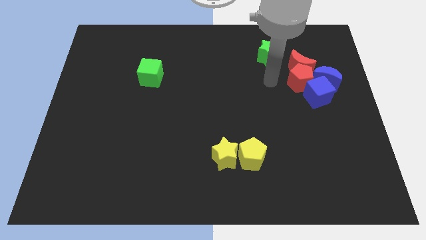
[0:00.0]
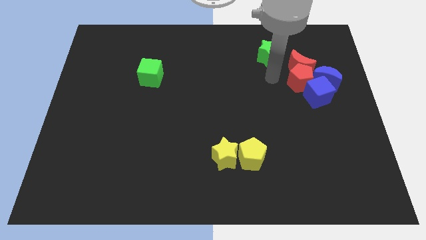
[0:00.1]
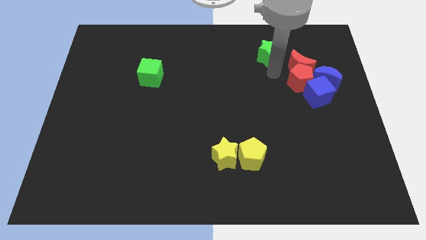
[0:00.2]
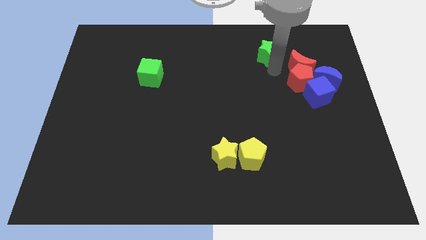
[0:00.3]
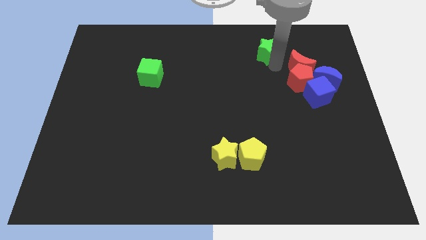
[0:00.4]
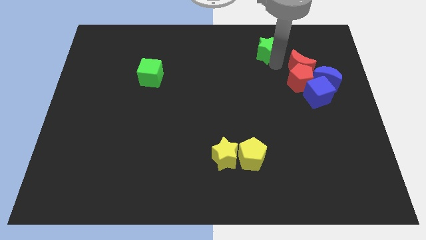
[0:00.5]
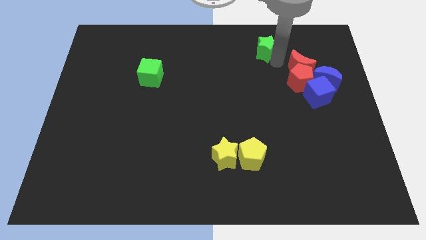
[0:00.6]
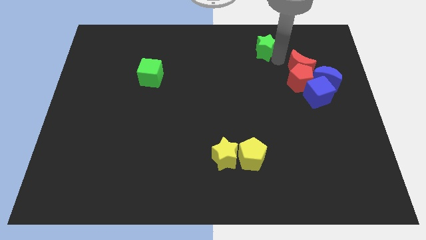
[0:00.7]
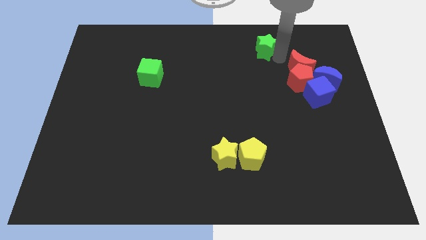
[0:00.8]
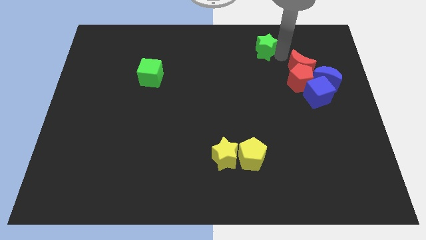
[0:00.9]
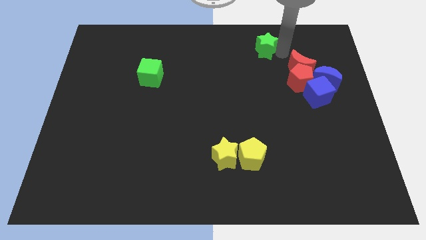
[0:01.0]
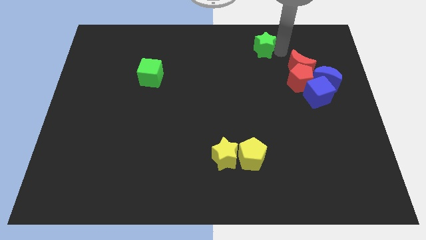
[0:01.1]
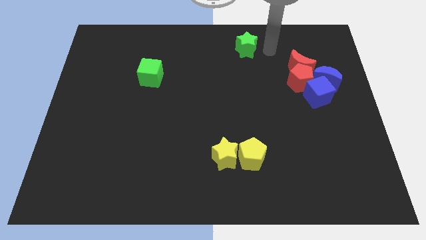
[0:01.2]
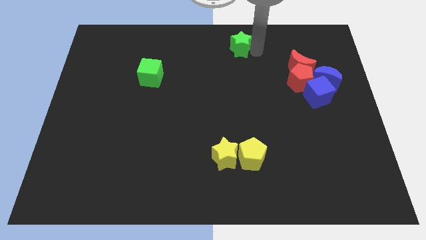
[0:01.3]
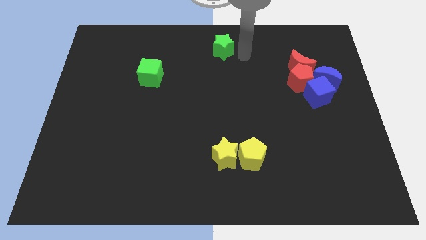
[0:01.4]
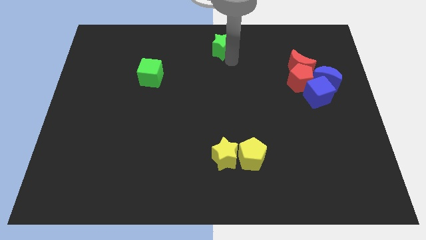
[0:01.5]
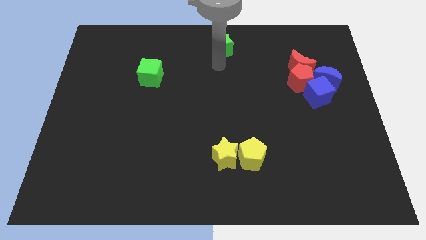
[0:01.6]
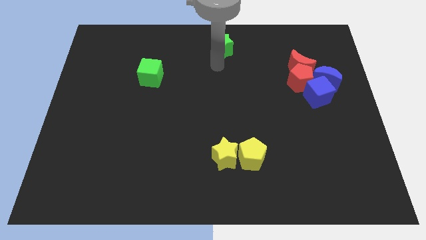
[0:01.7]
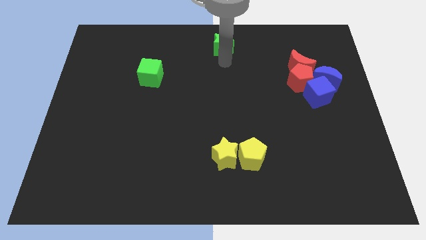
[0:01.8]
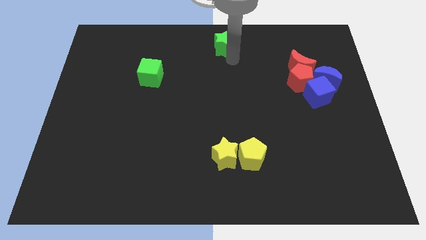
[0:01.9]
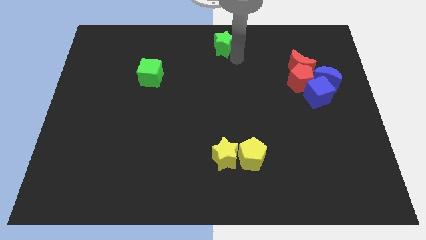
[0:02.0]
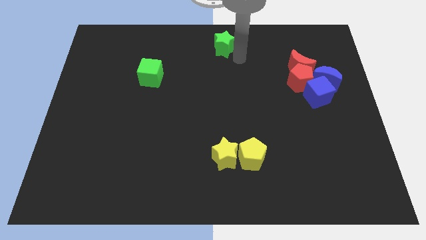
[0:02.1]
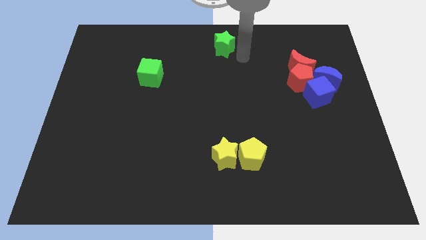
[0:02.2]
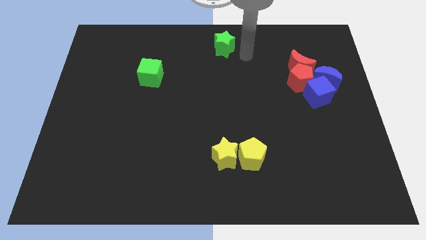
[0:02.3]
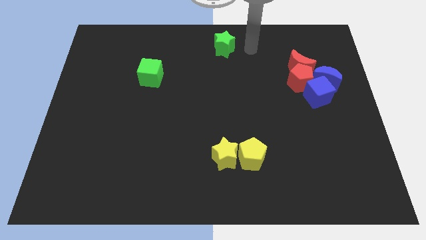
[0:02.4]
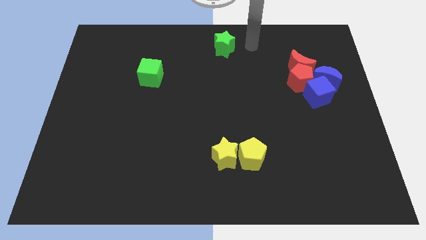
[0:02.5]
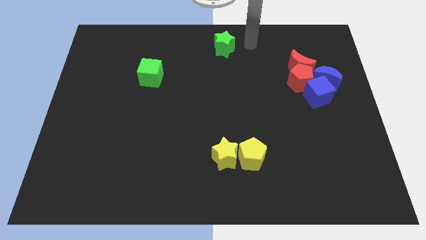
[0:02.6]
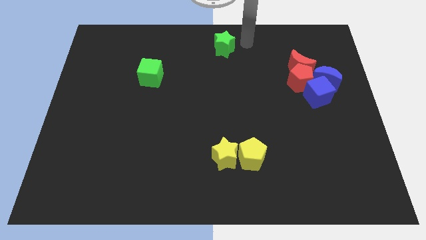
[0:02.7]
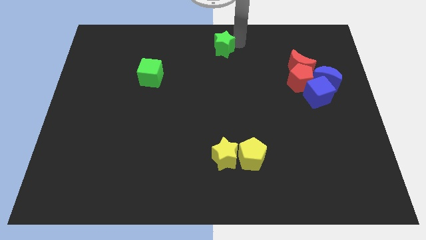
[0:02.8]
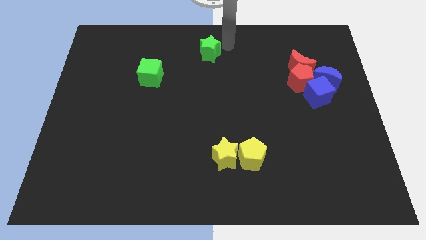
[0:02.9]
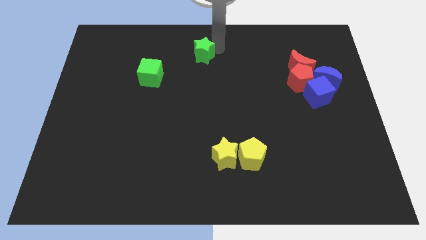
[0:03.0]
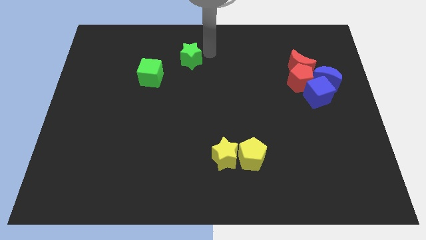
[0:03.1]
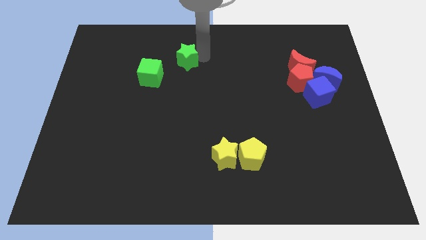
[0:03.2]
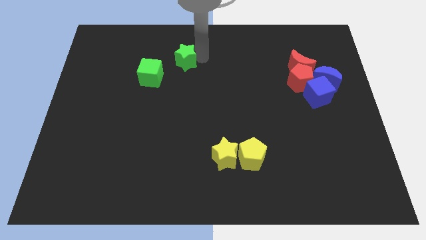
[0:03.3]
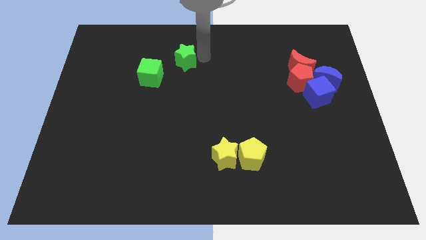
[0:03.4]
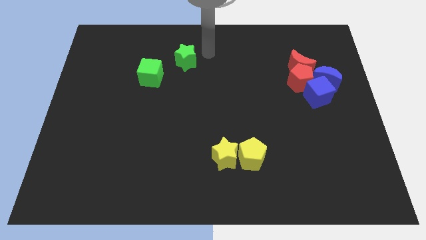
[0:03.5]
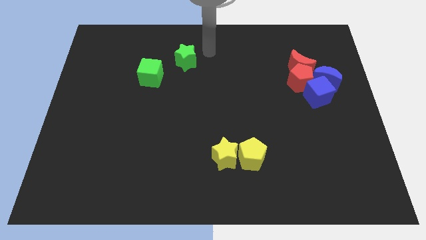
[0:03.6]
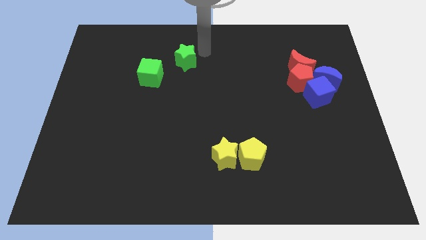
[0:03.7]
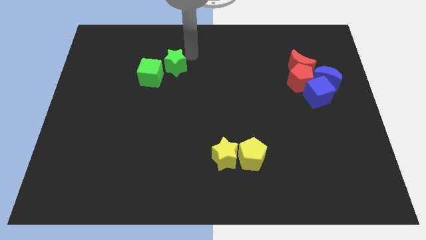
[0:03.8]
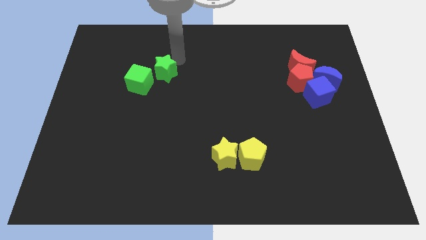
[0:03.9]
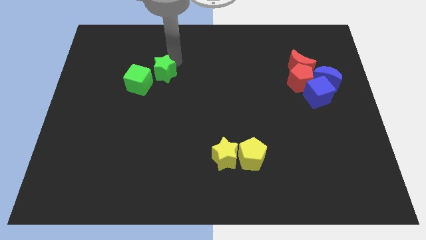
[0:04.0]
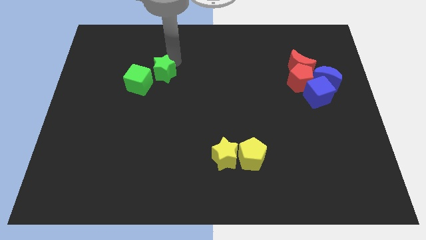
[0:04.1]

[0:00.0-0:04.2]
move green star into green cube

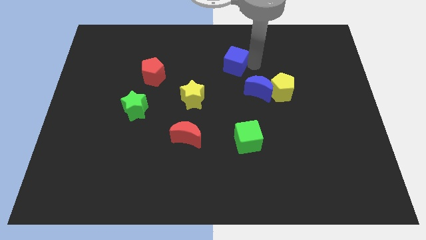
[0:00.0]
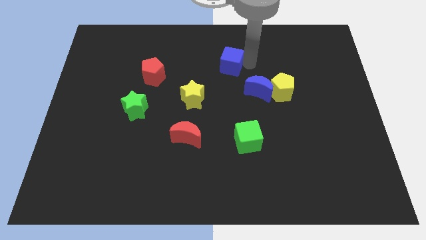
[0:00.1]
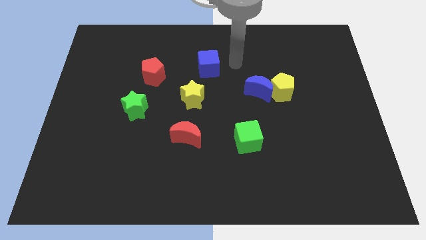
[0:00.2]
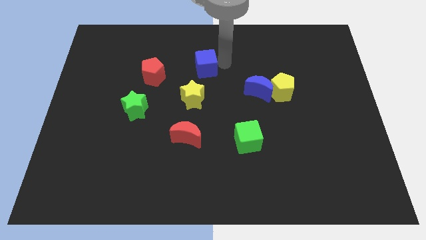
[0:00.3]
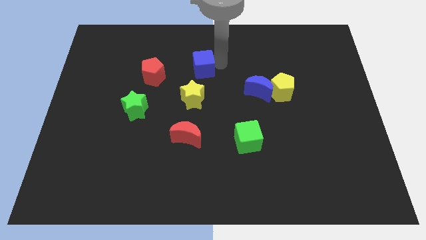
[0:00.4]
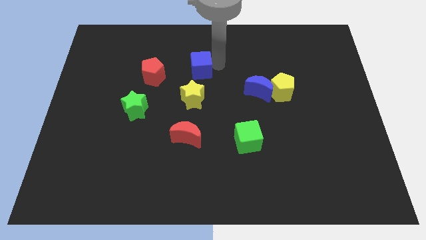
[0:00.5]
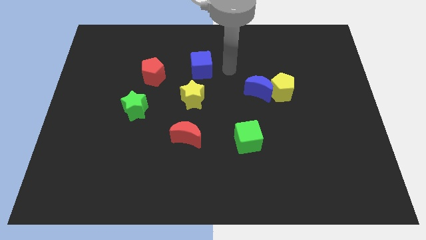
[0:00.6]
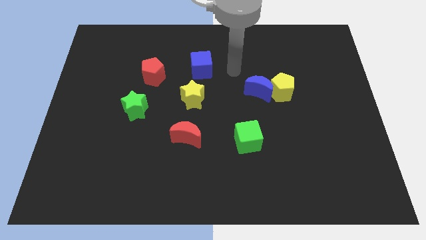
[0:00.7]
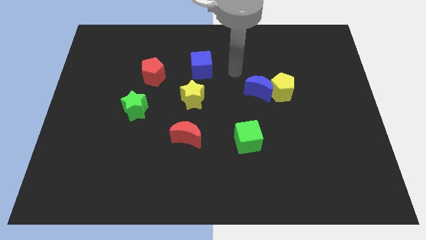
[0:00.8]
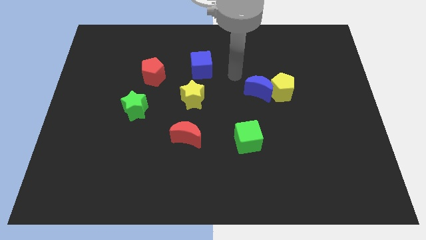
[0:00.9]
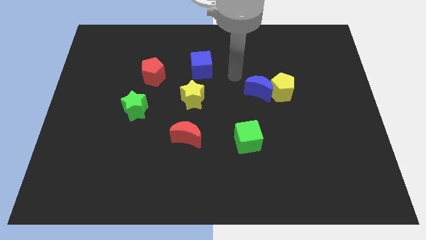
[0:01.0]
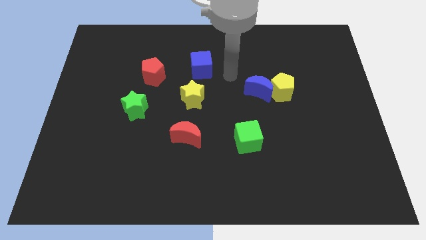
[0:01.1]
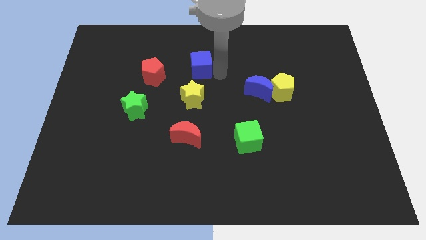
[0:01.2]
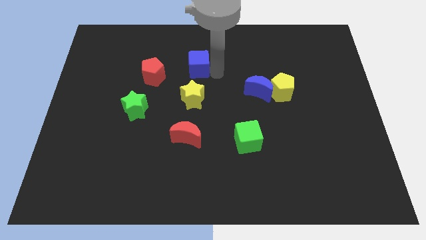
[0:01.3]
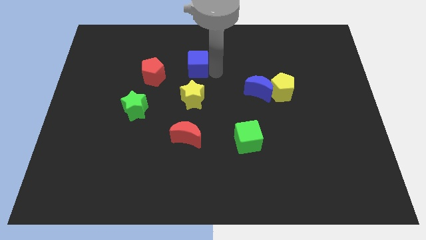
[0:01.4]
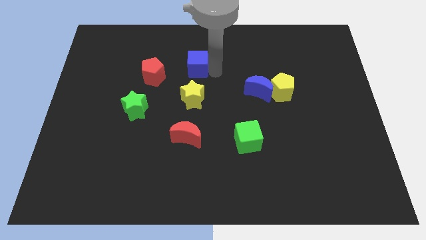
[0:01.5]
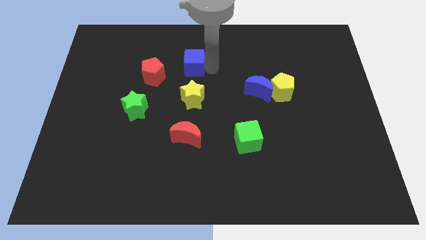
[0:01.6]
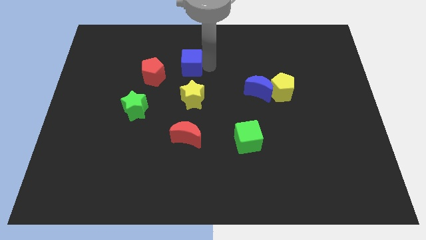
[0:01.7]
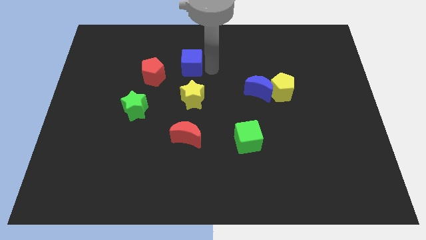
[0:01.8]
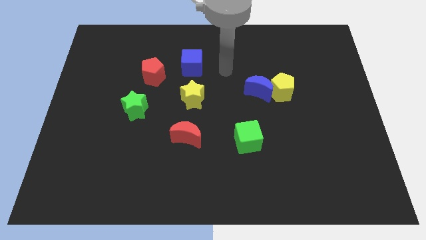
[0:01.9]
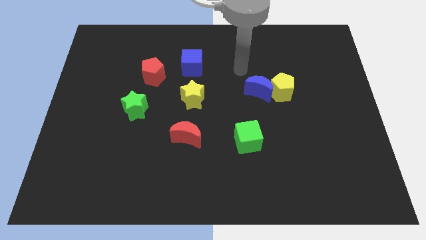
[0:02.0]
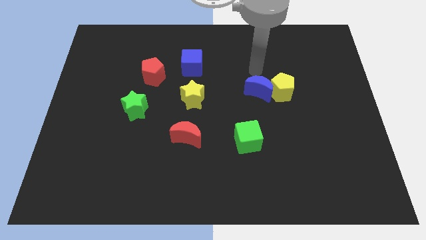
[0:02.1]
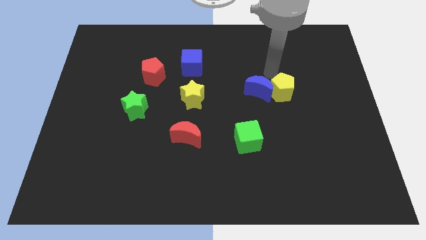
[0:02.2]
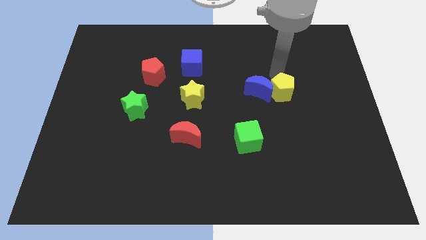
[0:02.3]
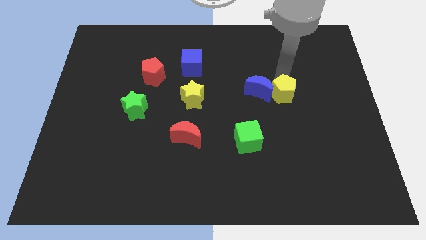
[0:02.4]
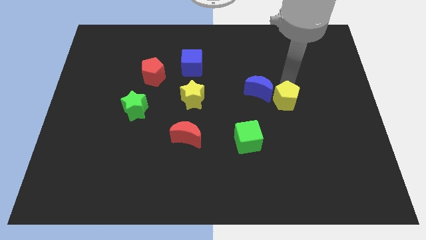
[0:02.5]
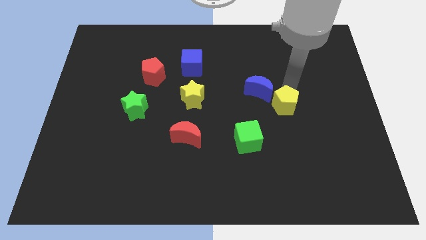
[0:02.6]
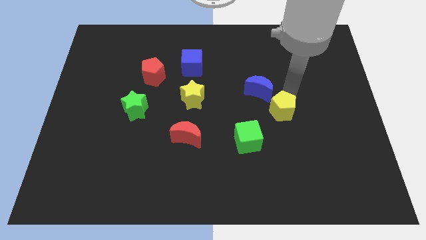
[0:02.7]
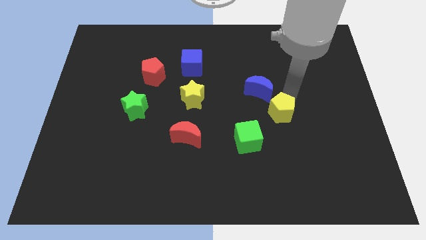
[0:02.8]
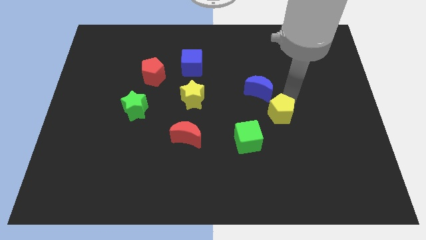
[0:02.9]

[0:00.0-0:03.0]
push yellow pentagon slightly to the bottom of the board

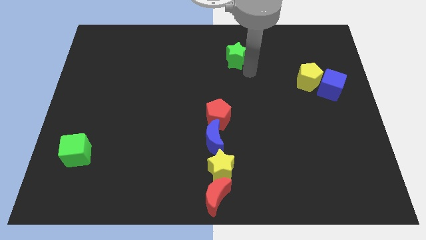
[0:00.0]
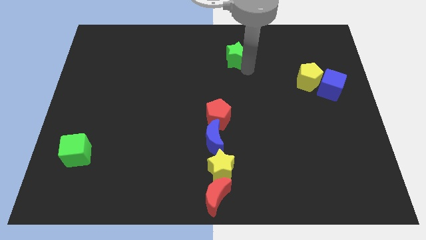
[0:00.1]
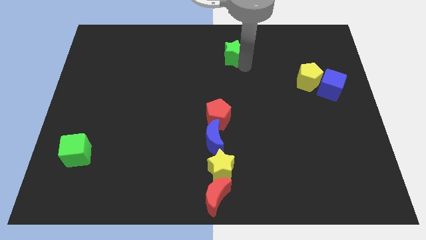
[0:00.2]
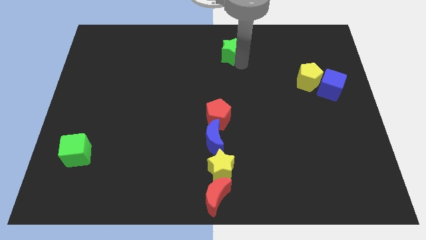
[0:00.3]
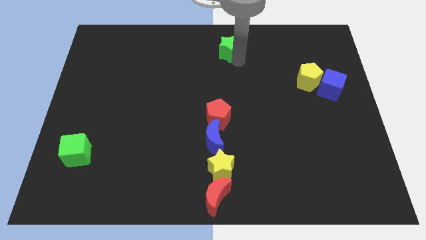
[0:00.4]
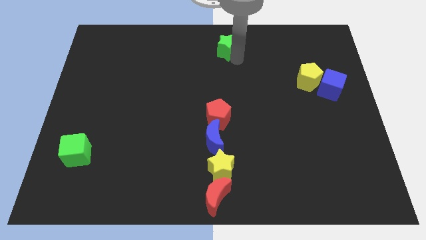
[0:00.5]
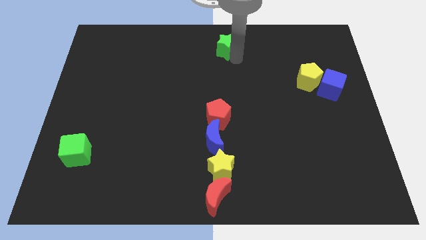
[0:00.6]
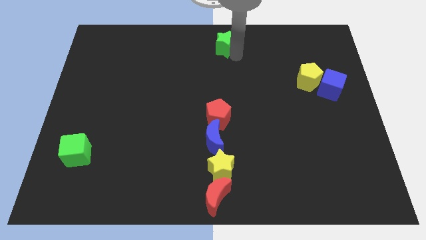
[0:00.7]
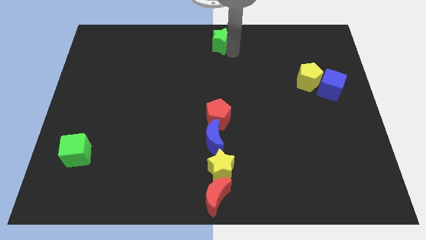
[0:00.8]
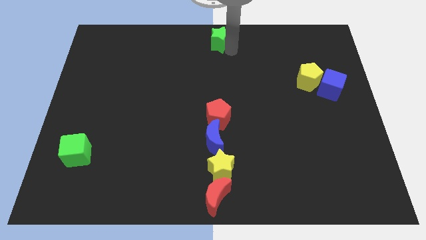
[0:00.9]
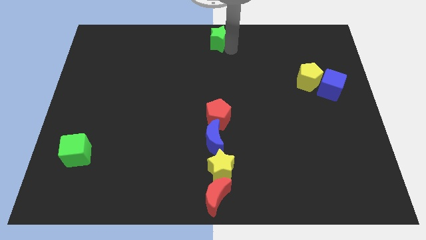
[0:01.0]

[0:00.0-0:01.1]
push the green star to the top center of the board

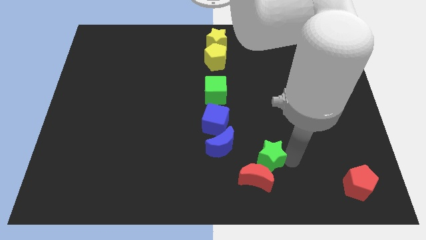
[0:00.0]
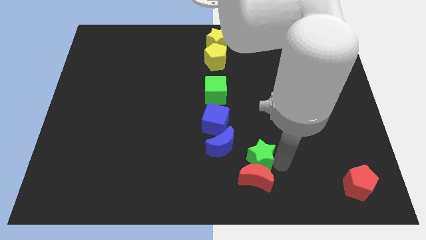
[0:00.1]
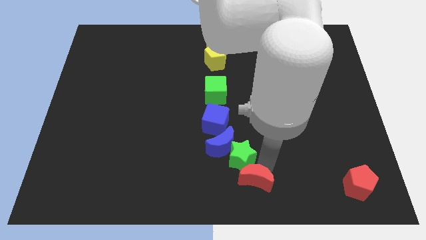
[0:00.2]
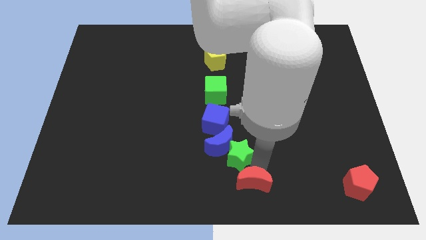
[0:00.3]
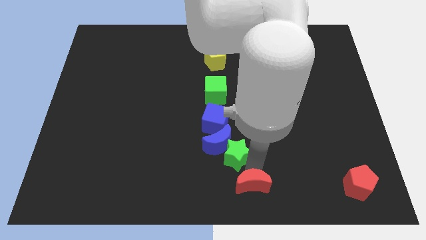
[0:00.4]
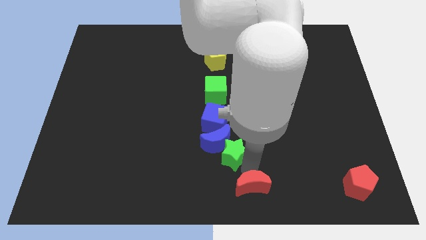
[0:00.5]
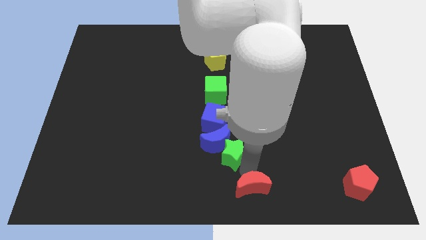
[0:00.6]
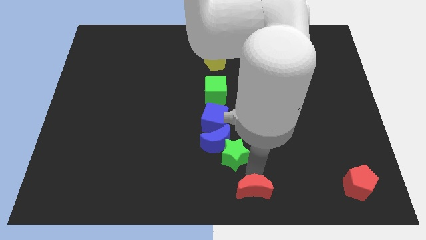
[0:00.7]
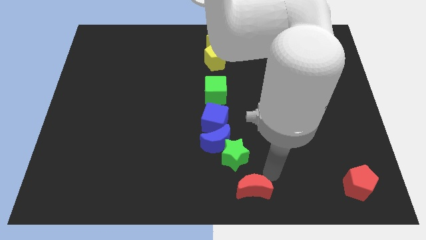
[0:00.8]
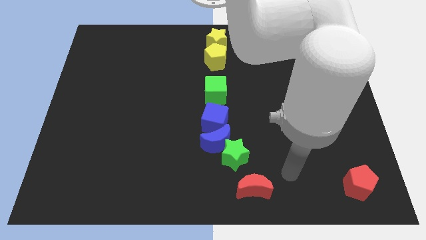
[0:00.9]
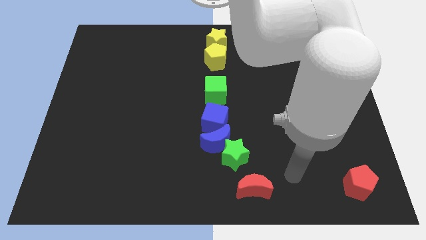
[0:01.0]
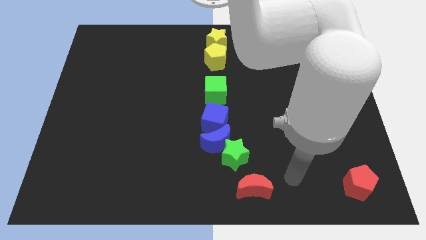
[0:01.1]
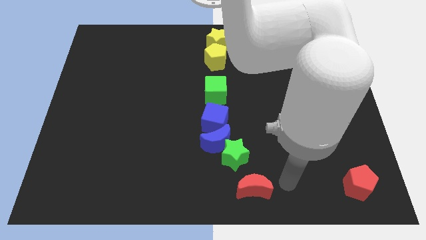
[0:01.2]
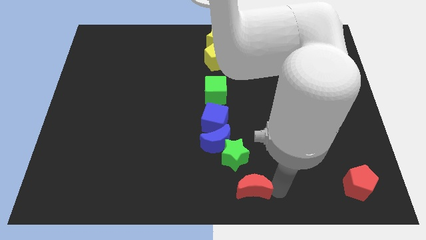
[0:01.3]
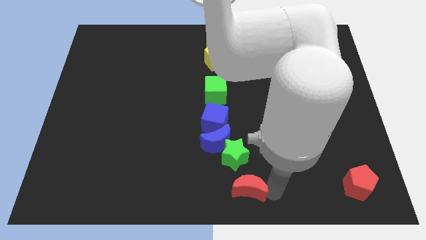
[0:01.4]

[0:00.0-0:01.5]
separate red moon from the green star
